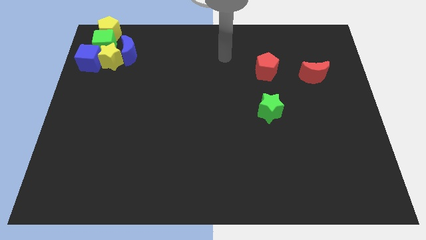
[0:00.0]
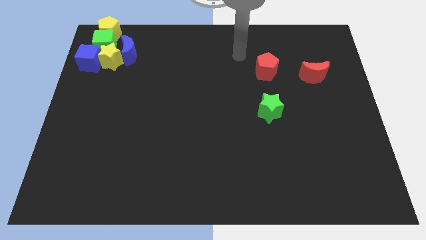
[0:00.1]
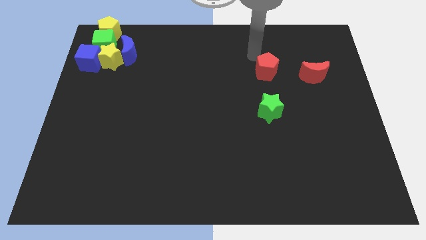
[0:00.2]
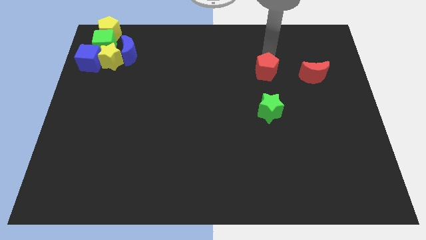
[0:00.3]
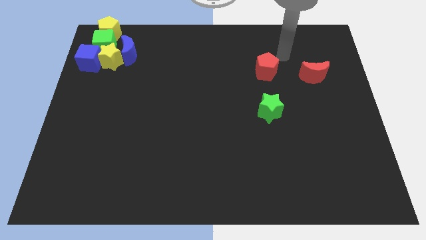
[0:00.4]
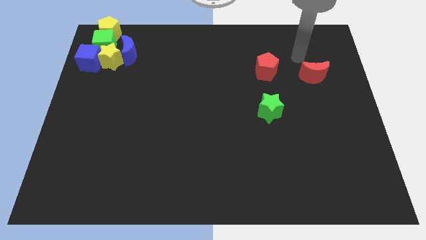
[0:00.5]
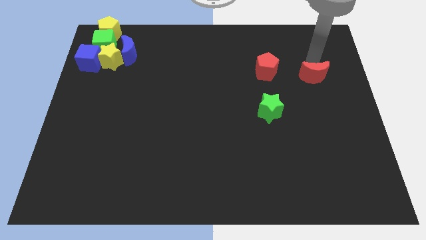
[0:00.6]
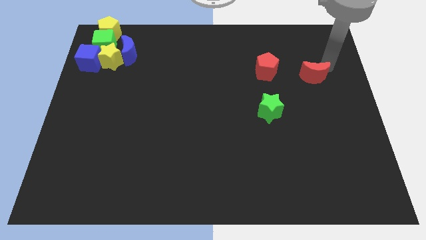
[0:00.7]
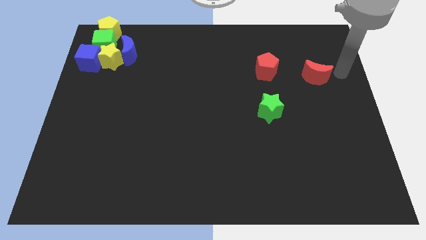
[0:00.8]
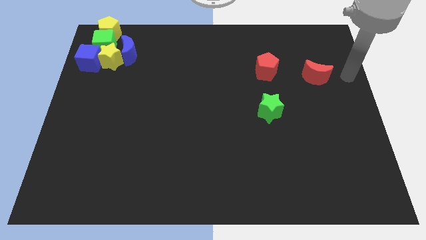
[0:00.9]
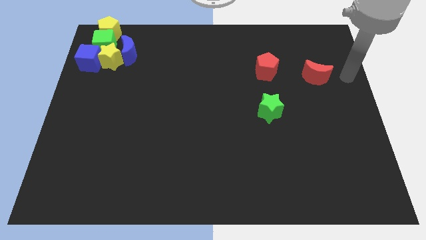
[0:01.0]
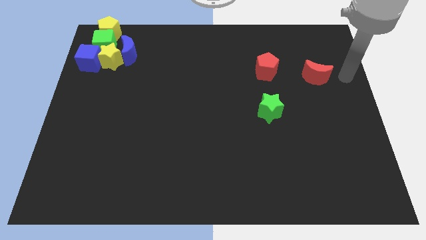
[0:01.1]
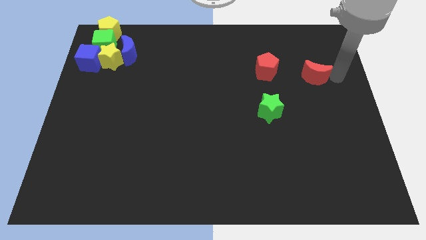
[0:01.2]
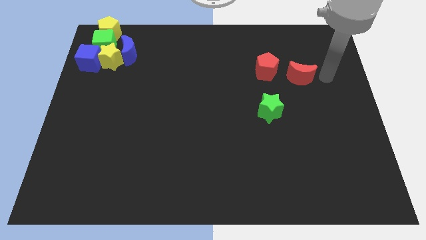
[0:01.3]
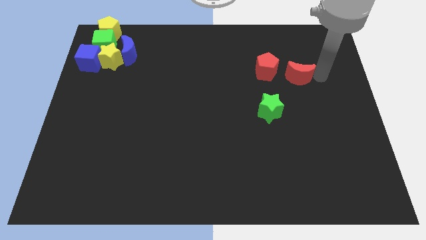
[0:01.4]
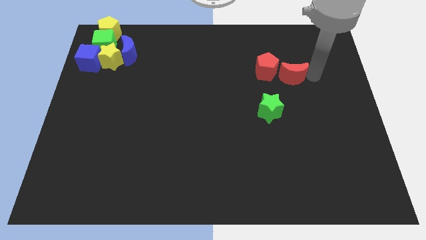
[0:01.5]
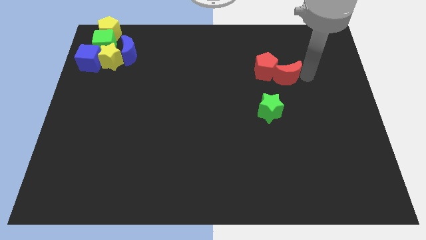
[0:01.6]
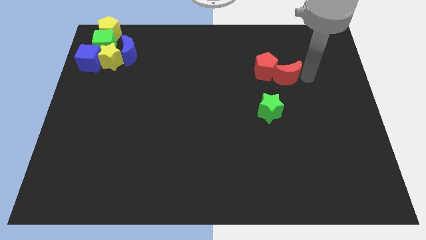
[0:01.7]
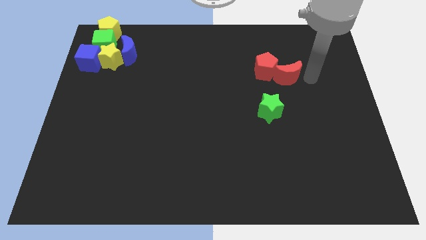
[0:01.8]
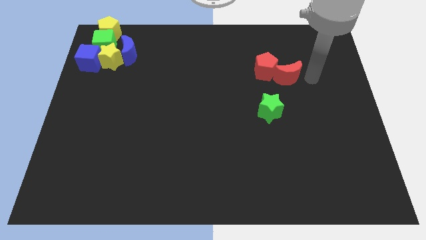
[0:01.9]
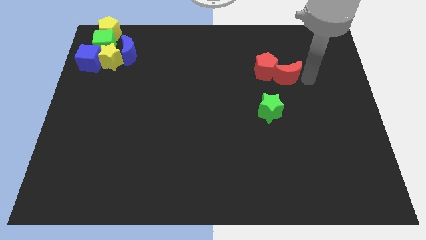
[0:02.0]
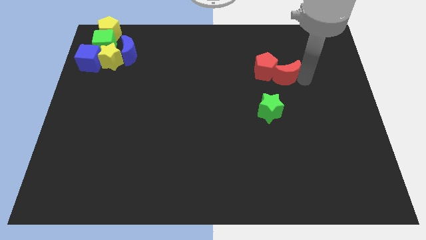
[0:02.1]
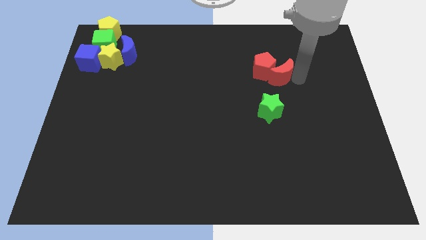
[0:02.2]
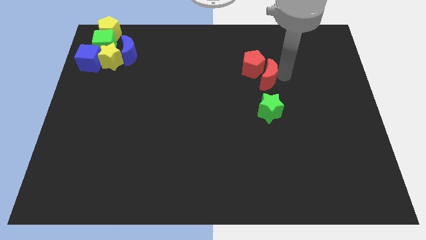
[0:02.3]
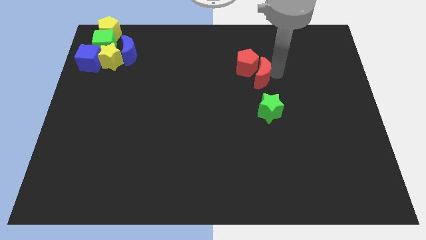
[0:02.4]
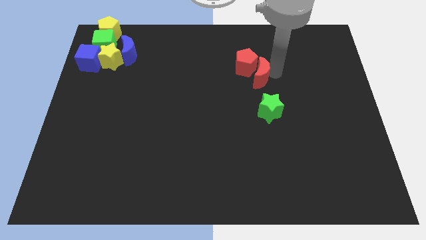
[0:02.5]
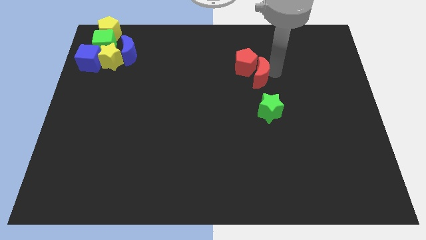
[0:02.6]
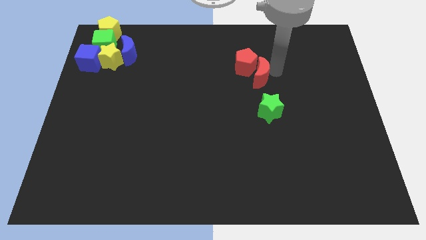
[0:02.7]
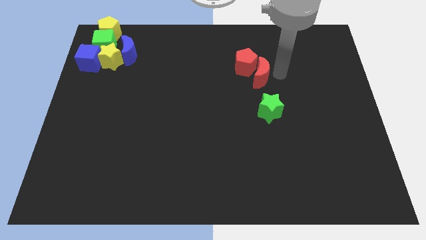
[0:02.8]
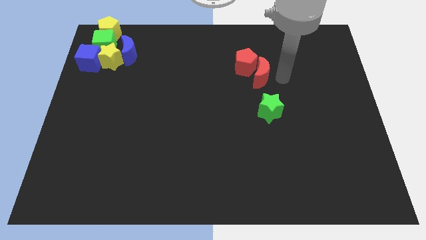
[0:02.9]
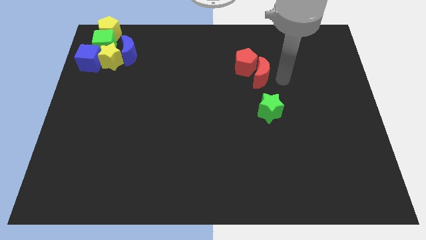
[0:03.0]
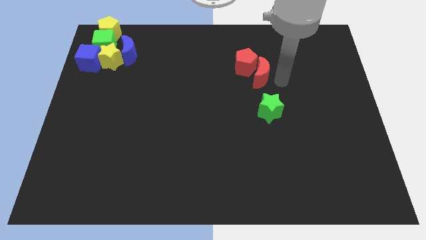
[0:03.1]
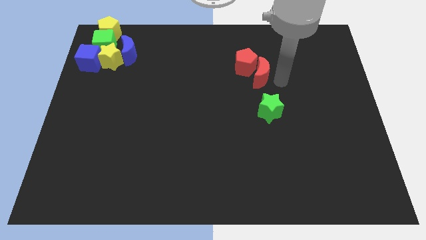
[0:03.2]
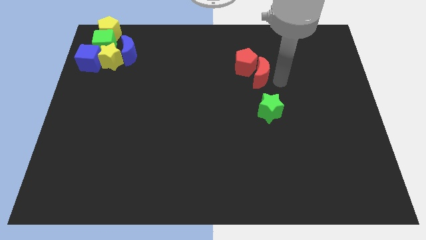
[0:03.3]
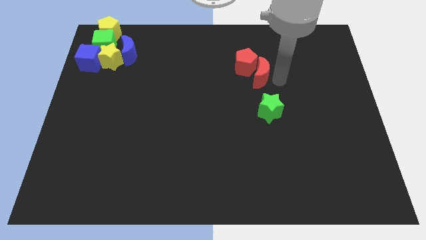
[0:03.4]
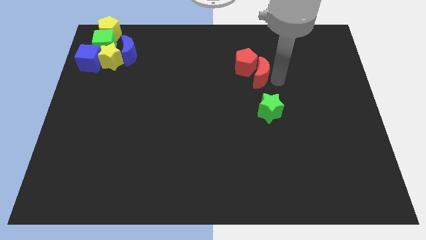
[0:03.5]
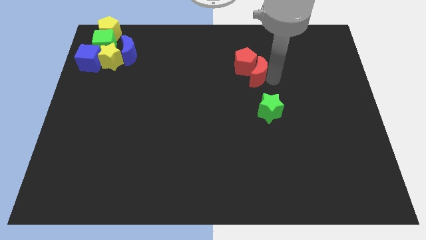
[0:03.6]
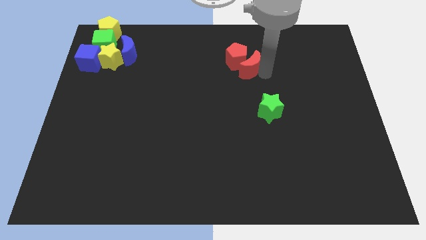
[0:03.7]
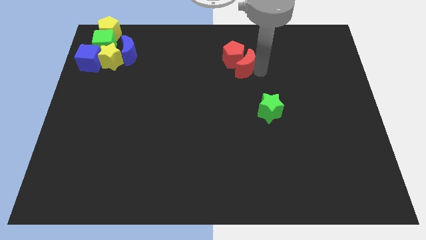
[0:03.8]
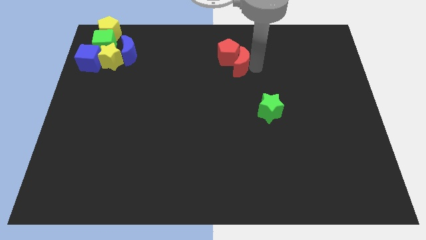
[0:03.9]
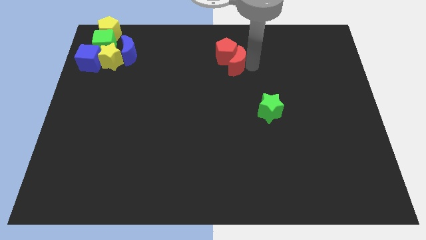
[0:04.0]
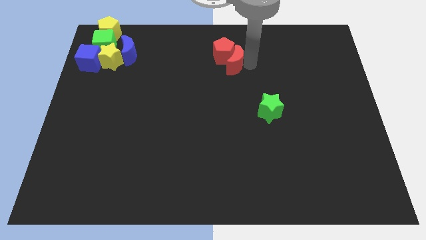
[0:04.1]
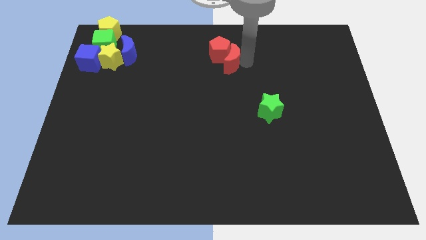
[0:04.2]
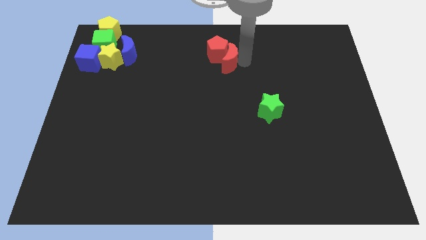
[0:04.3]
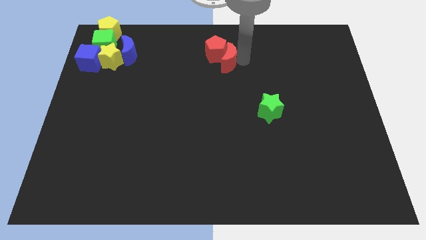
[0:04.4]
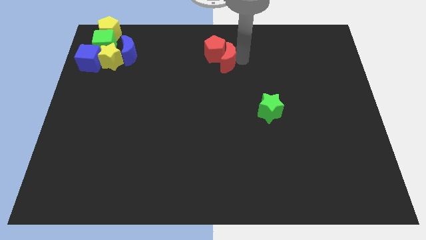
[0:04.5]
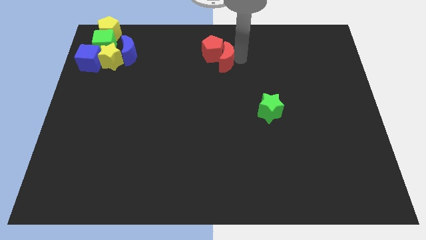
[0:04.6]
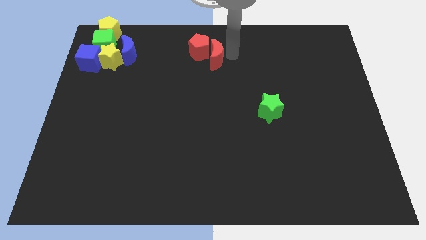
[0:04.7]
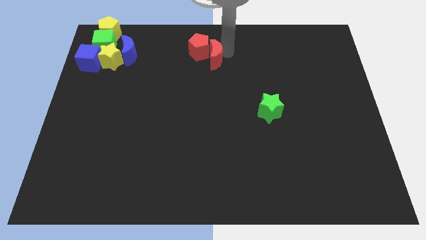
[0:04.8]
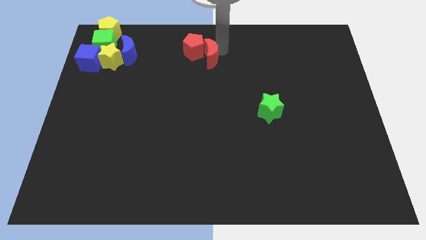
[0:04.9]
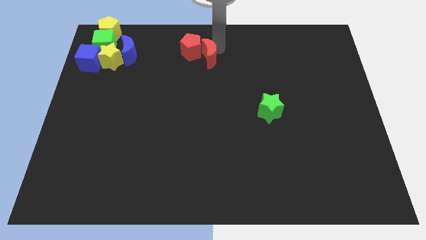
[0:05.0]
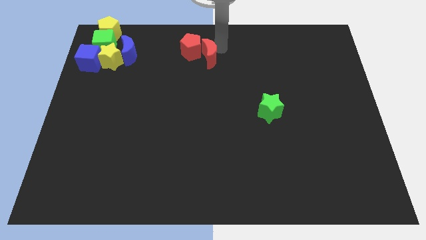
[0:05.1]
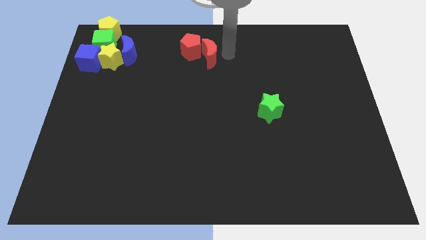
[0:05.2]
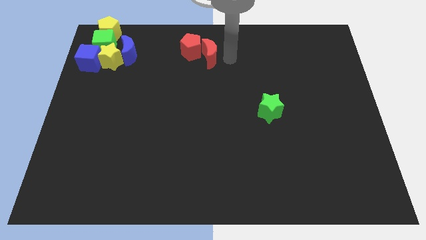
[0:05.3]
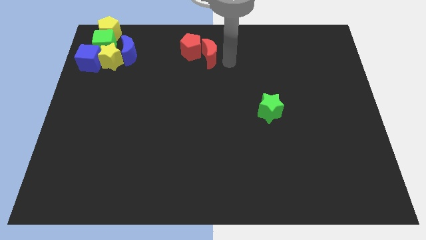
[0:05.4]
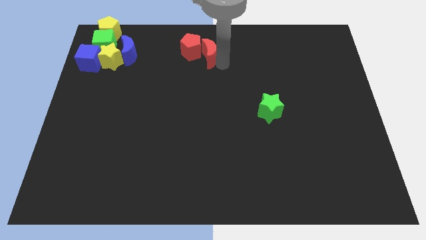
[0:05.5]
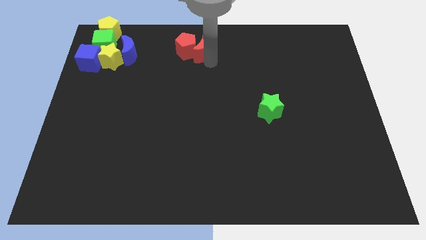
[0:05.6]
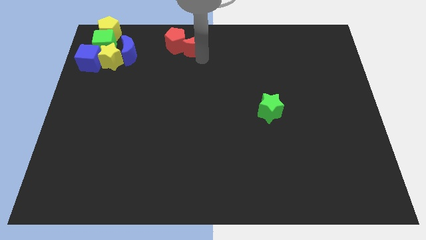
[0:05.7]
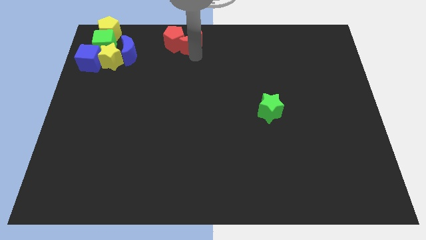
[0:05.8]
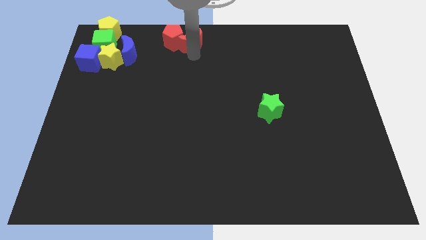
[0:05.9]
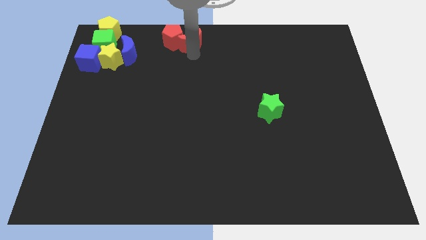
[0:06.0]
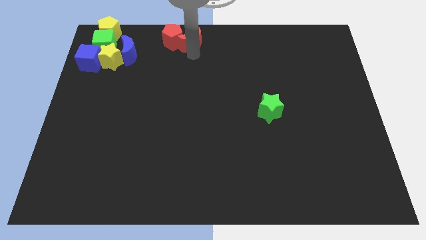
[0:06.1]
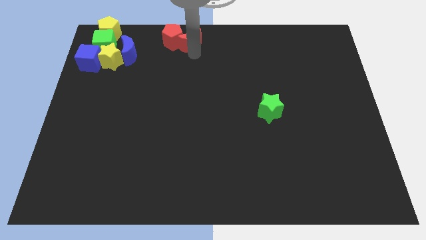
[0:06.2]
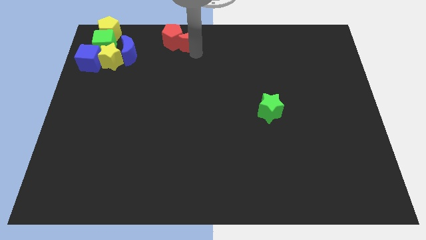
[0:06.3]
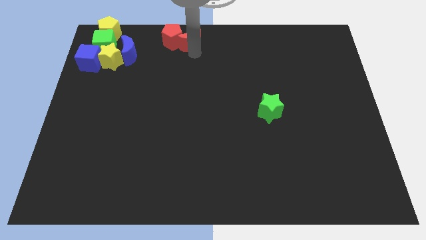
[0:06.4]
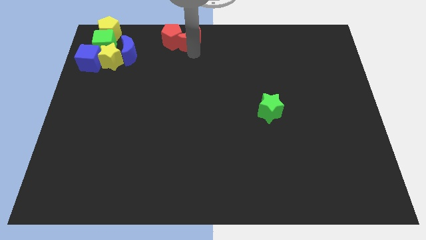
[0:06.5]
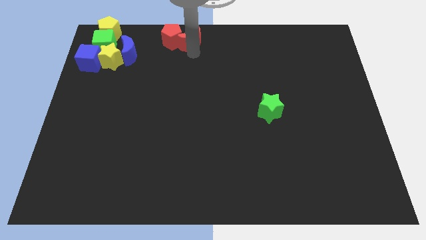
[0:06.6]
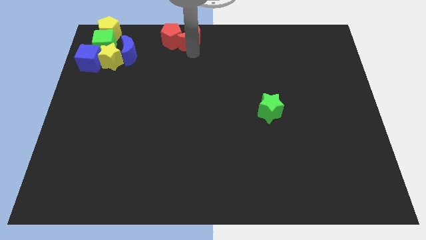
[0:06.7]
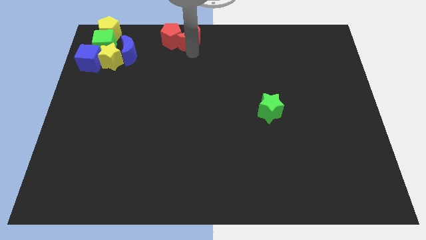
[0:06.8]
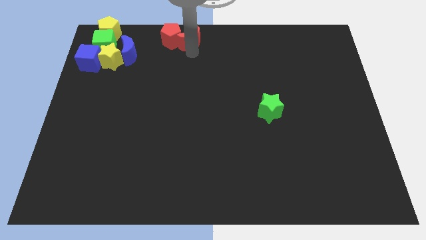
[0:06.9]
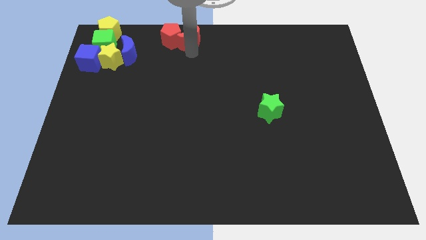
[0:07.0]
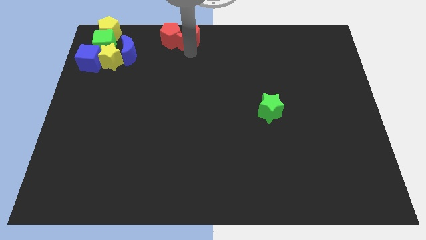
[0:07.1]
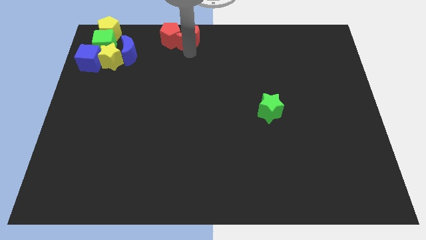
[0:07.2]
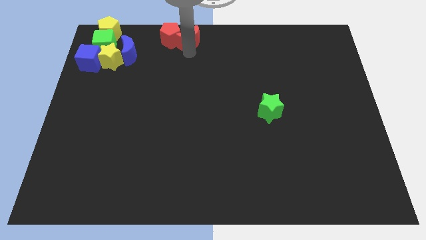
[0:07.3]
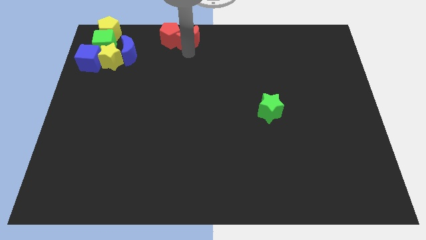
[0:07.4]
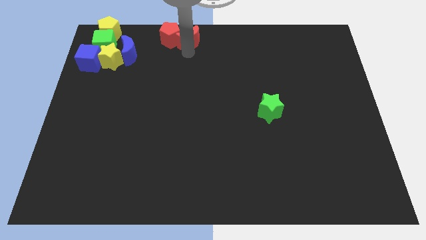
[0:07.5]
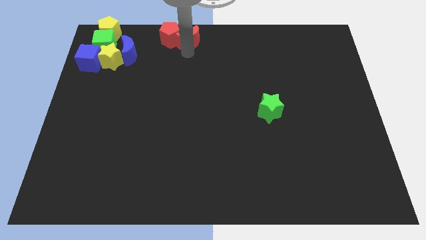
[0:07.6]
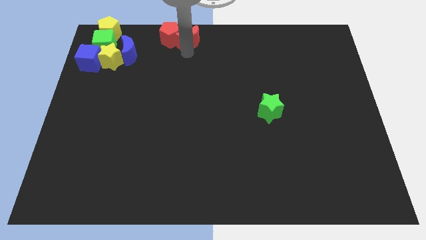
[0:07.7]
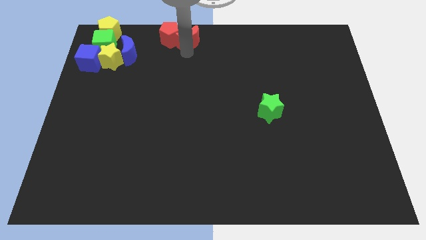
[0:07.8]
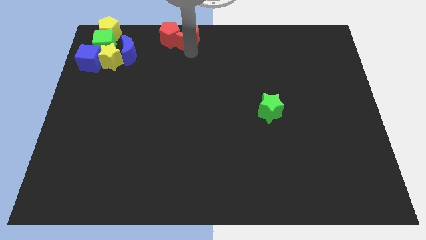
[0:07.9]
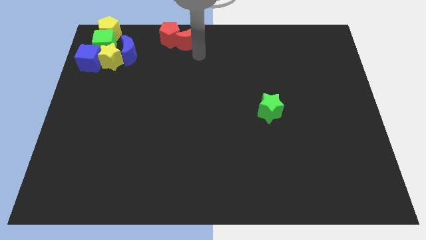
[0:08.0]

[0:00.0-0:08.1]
push the red moon and red pentagon to the top center of the board

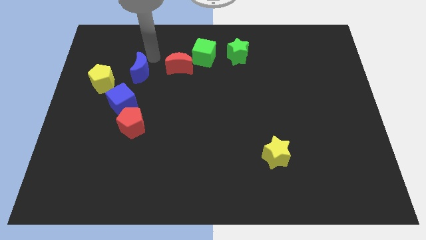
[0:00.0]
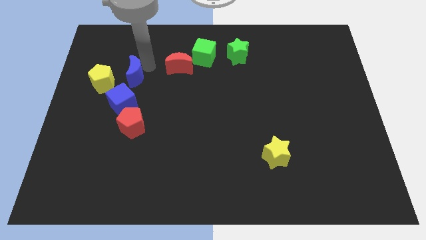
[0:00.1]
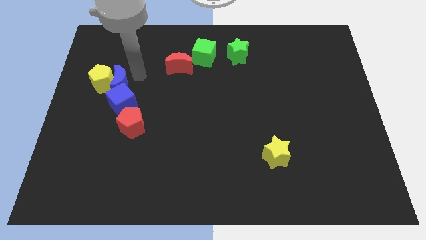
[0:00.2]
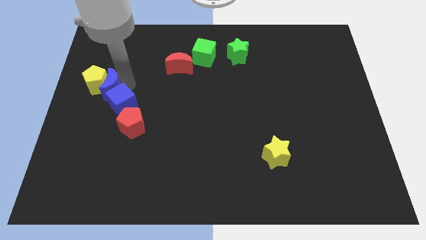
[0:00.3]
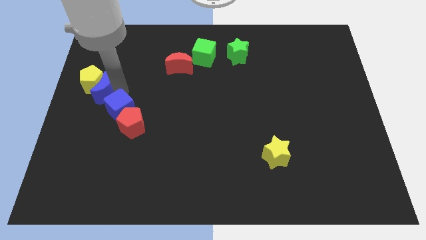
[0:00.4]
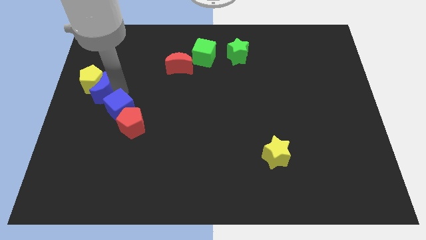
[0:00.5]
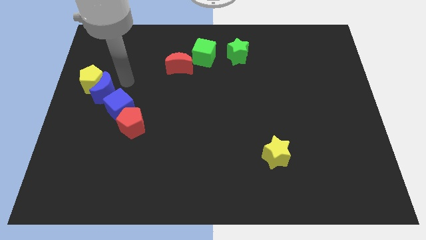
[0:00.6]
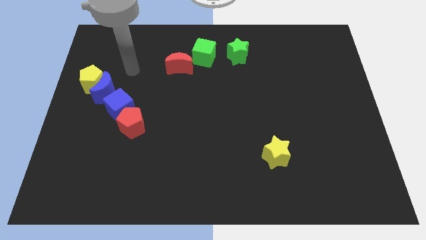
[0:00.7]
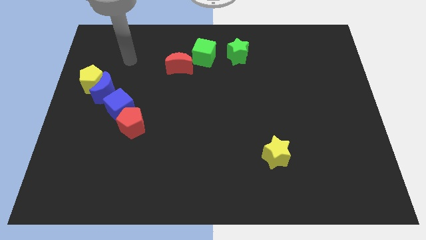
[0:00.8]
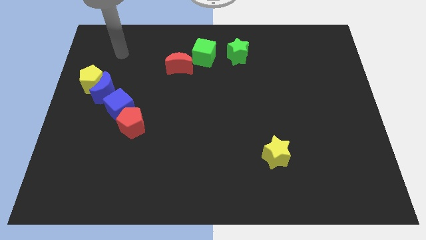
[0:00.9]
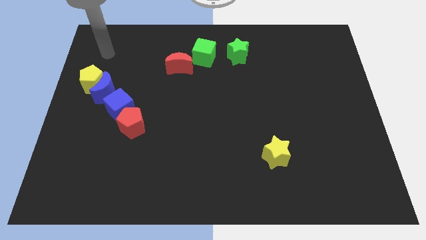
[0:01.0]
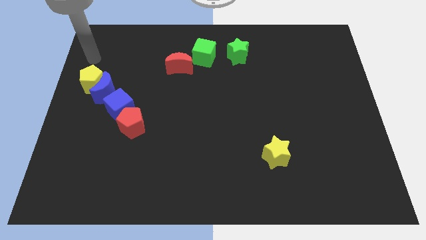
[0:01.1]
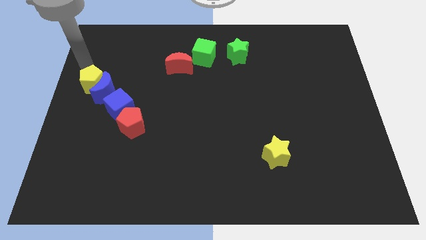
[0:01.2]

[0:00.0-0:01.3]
push the blue moon in between blue cube and yellow pentagon
